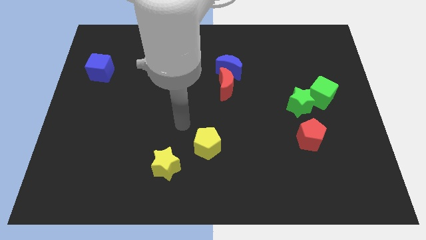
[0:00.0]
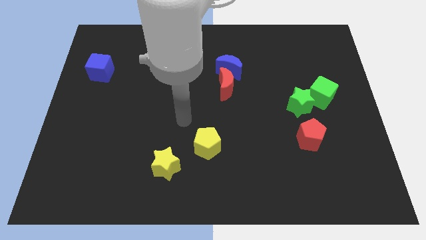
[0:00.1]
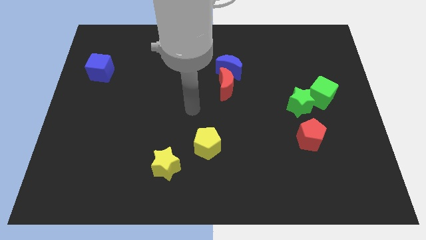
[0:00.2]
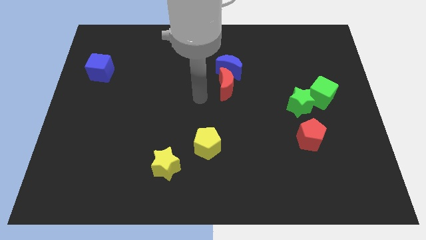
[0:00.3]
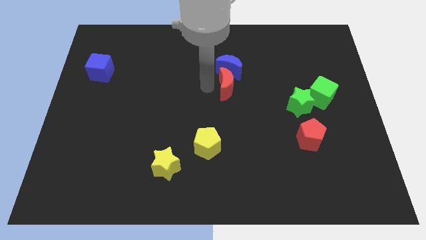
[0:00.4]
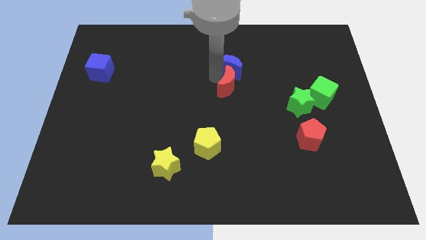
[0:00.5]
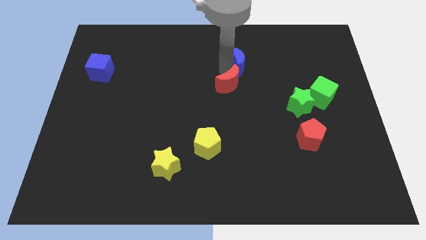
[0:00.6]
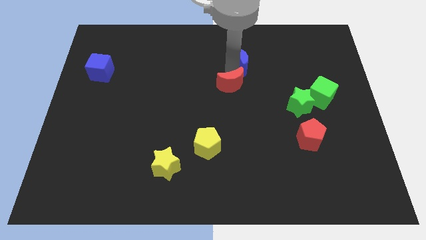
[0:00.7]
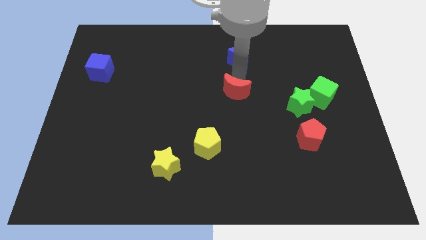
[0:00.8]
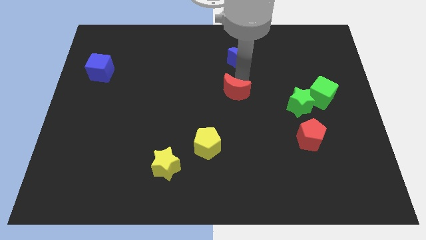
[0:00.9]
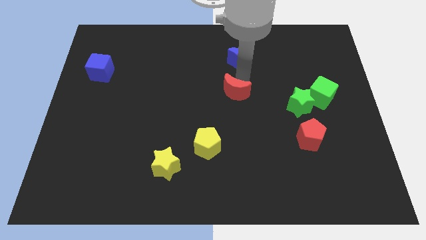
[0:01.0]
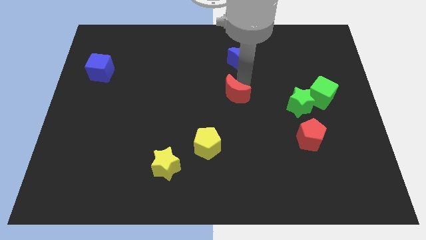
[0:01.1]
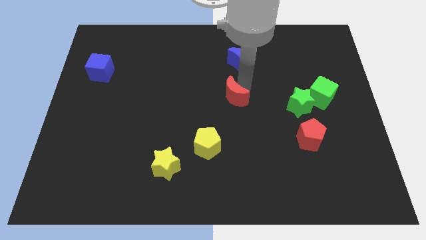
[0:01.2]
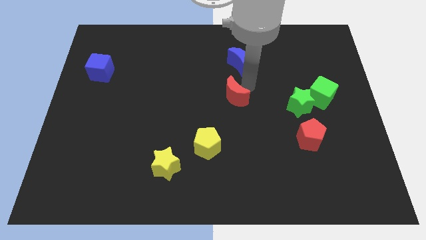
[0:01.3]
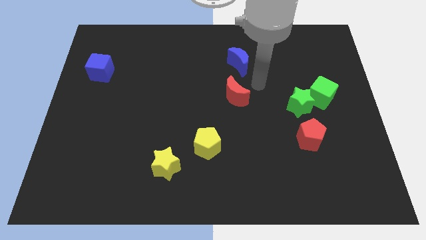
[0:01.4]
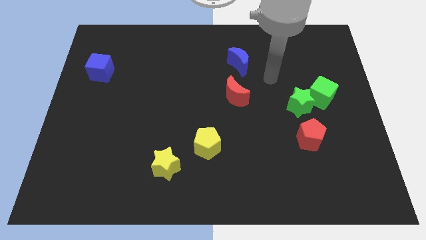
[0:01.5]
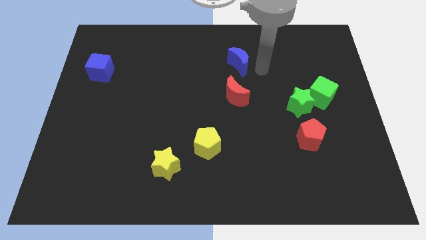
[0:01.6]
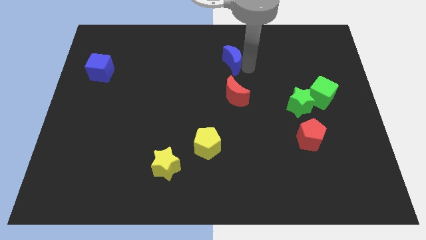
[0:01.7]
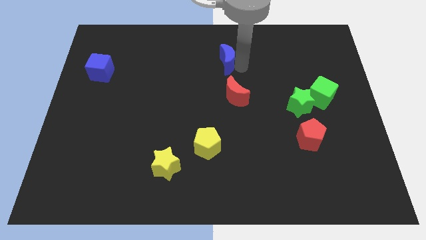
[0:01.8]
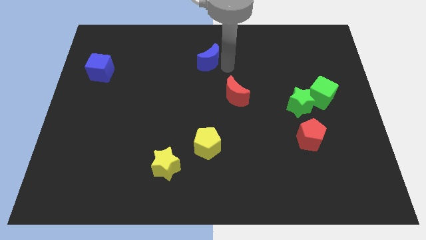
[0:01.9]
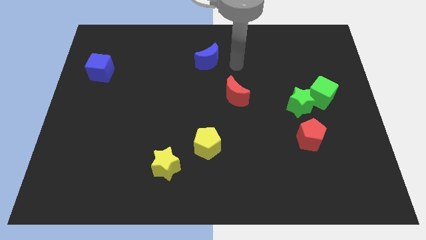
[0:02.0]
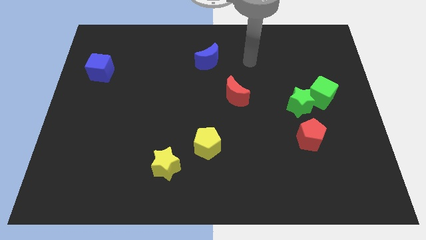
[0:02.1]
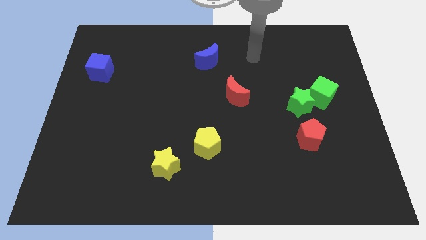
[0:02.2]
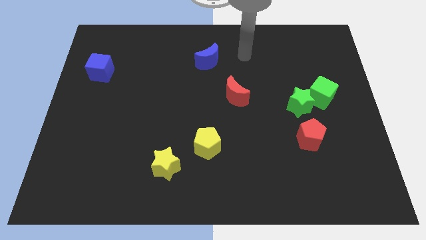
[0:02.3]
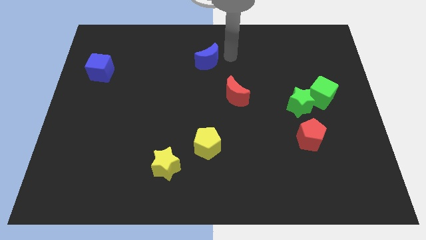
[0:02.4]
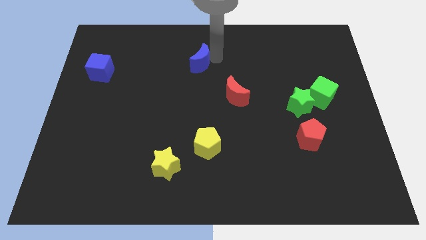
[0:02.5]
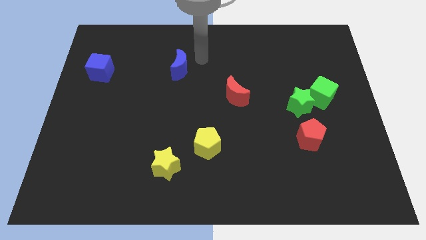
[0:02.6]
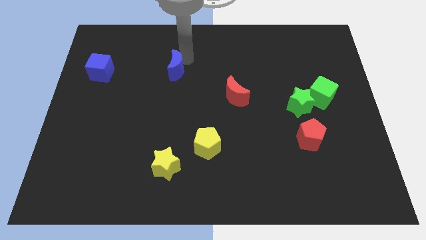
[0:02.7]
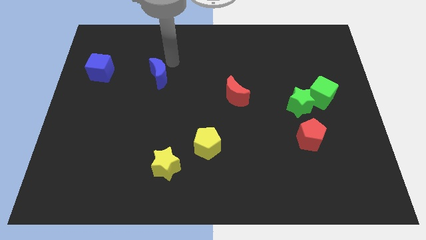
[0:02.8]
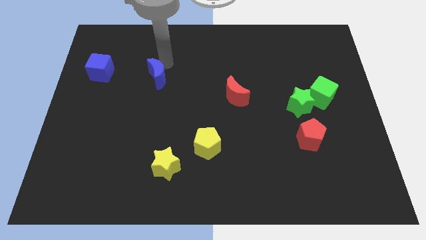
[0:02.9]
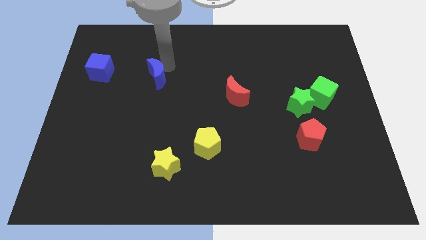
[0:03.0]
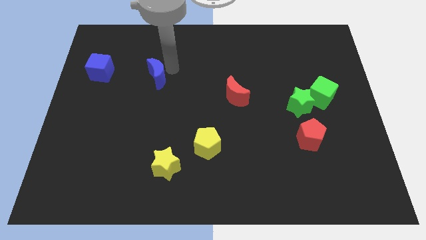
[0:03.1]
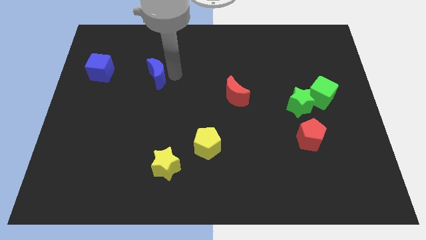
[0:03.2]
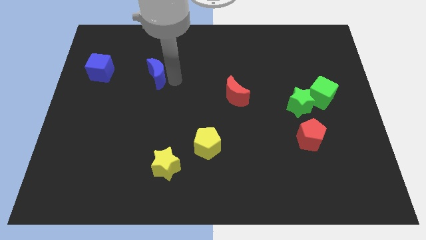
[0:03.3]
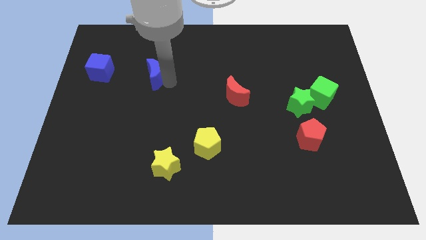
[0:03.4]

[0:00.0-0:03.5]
move the blue crescent towards the blue cube

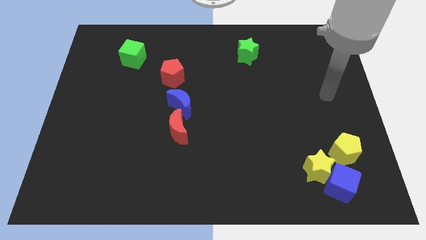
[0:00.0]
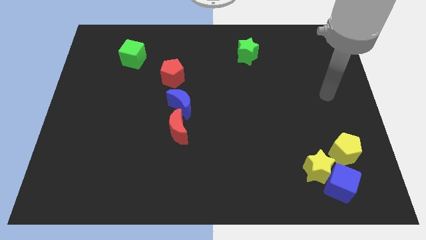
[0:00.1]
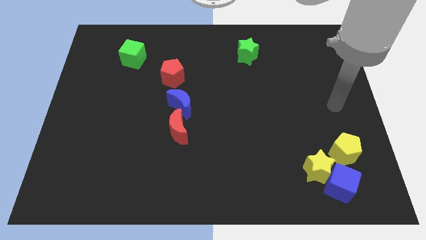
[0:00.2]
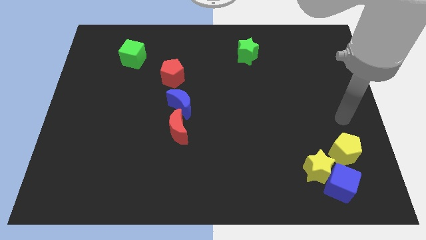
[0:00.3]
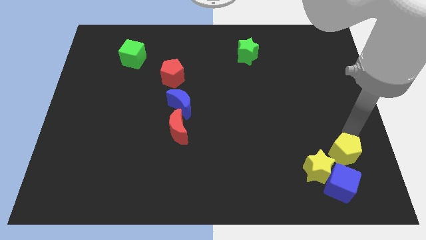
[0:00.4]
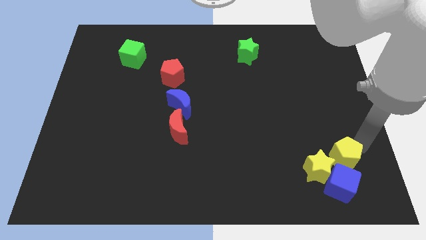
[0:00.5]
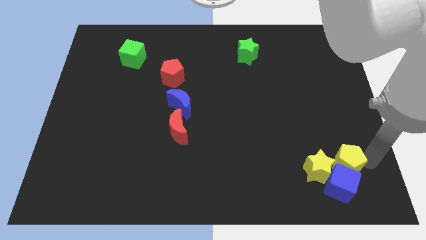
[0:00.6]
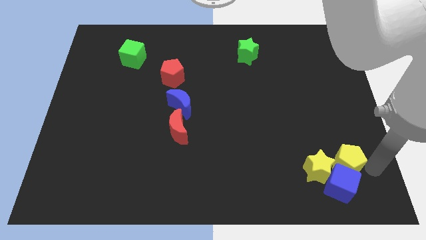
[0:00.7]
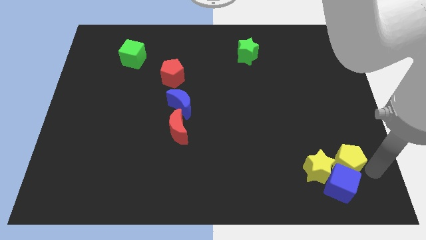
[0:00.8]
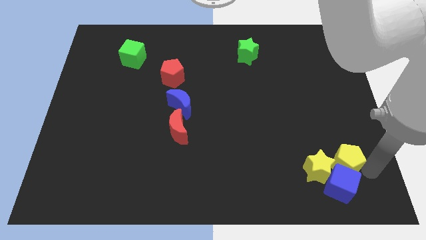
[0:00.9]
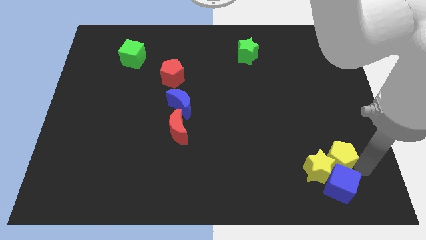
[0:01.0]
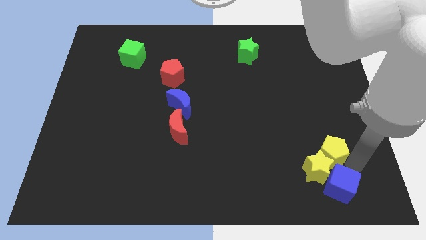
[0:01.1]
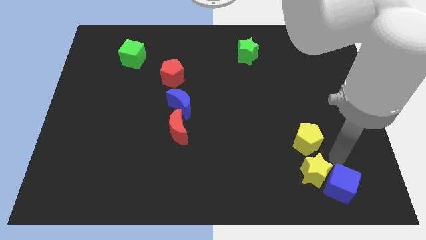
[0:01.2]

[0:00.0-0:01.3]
push the yellow pentagon above the yellow star

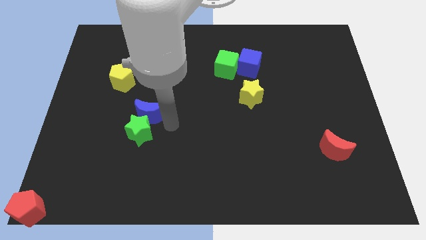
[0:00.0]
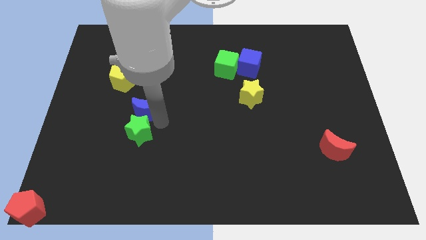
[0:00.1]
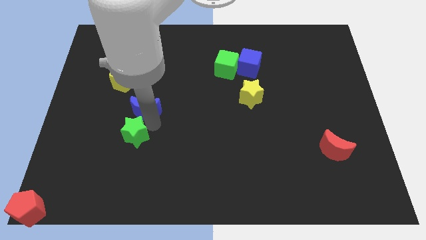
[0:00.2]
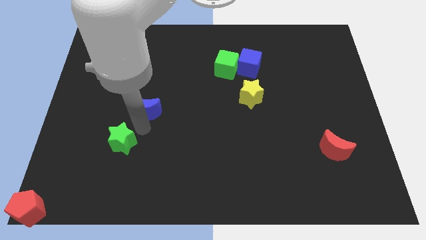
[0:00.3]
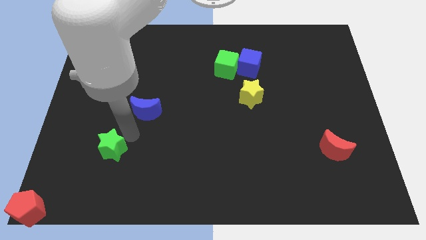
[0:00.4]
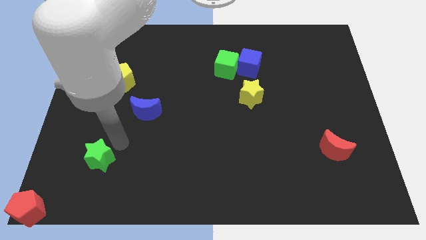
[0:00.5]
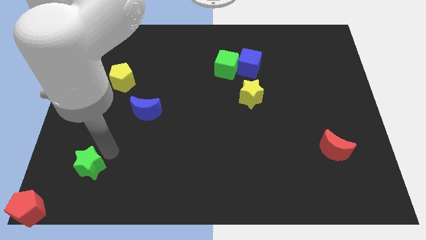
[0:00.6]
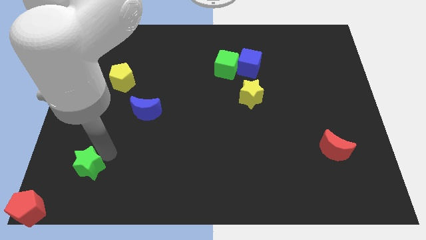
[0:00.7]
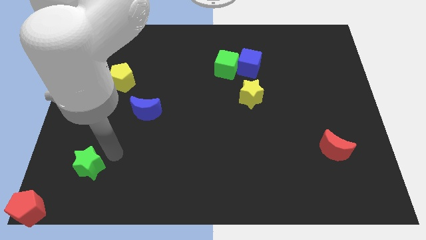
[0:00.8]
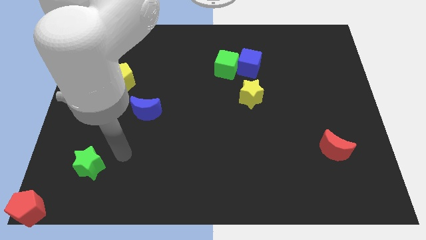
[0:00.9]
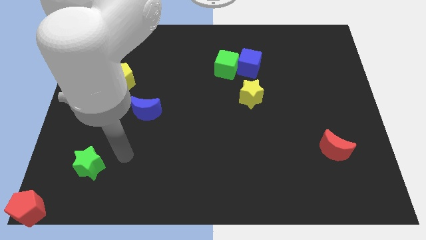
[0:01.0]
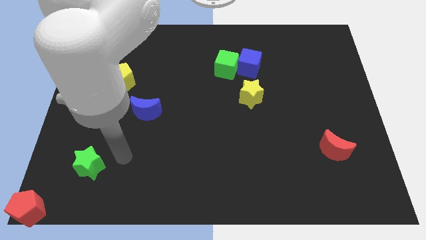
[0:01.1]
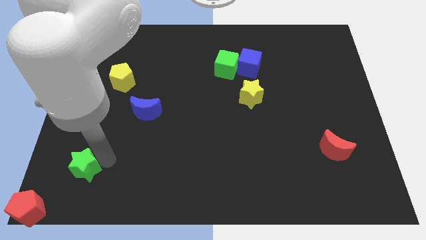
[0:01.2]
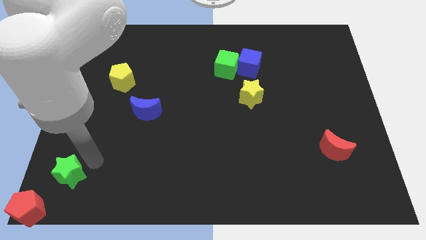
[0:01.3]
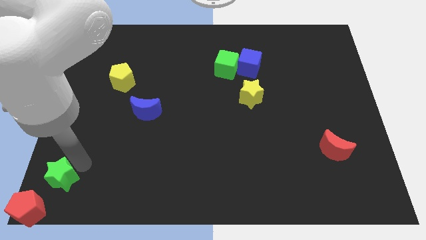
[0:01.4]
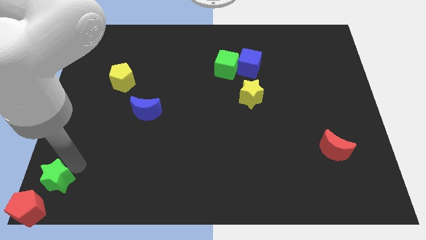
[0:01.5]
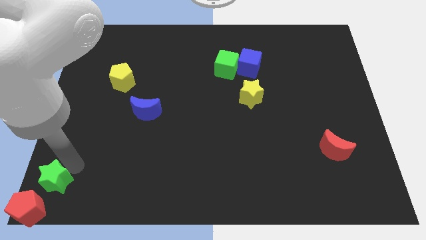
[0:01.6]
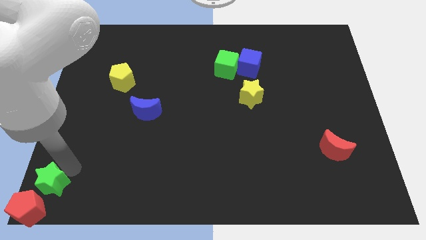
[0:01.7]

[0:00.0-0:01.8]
push the green star close to the top right side of the red pentagon

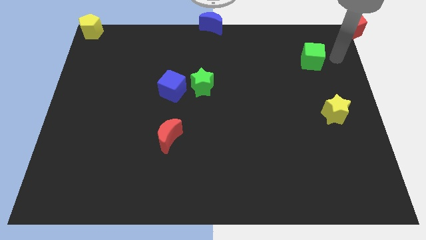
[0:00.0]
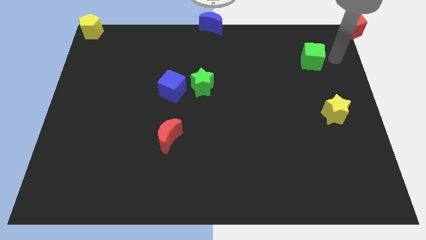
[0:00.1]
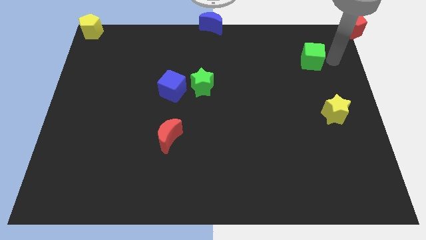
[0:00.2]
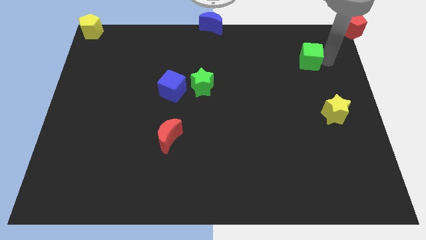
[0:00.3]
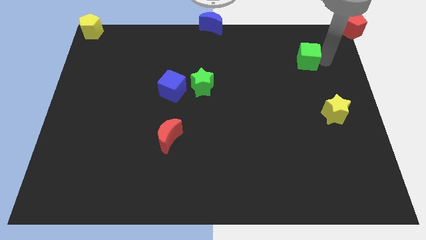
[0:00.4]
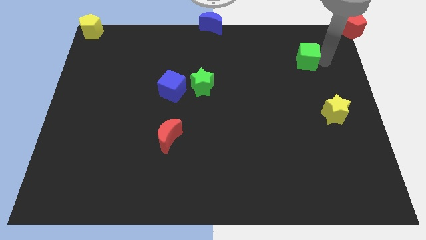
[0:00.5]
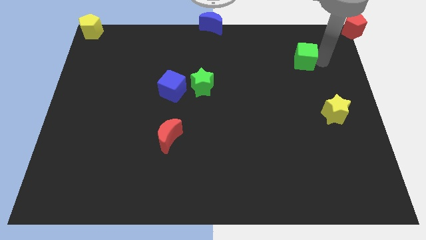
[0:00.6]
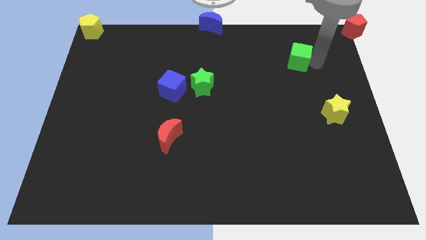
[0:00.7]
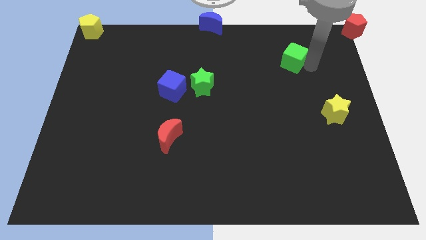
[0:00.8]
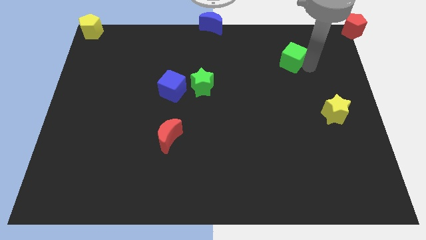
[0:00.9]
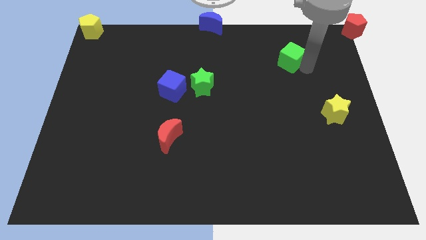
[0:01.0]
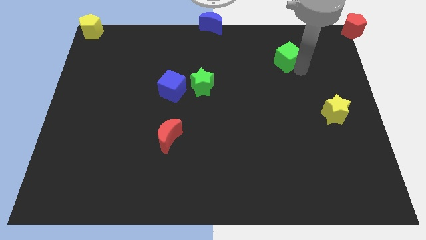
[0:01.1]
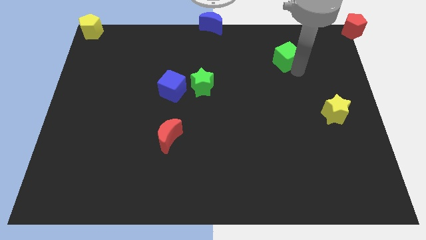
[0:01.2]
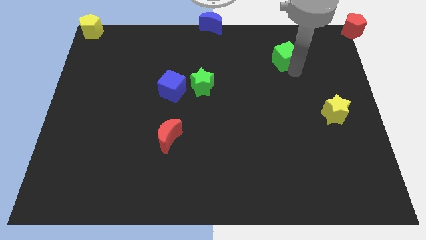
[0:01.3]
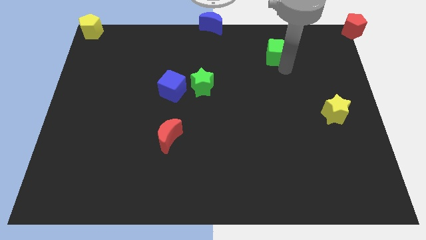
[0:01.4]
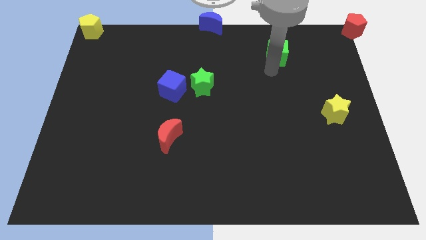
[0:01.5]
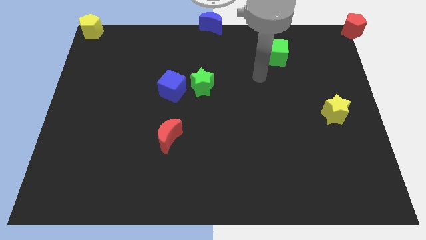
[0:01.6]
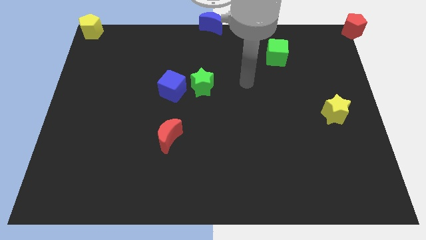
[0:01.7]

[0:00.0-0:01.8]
slide the green cube between blue moon and yellow star

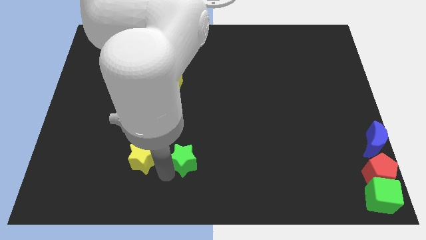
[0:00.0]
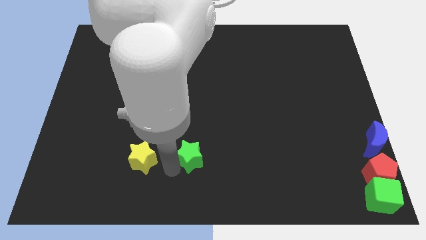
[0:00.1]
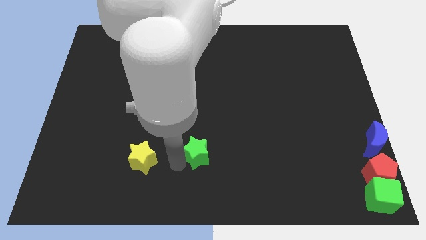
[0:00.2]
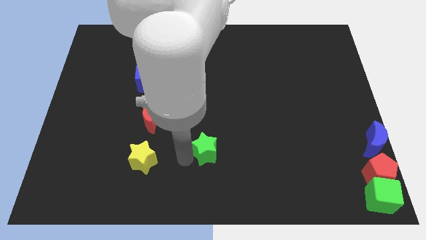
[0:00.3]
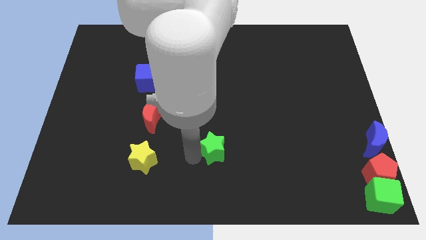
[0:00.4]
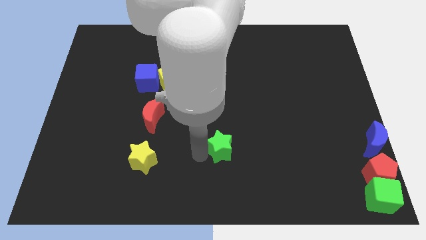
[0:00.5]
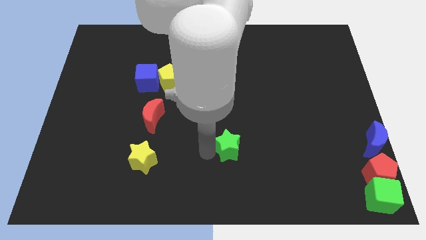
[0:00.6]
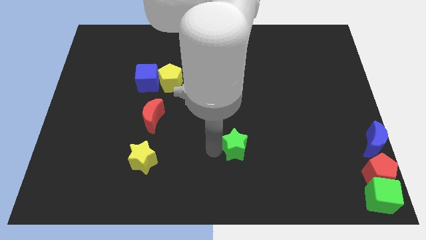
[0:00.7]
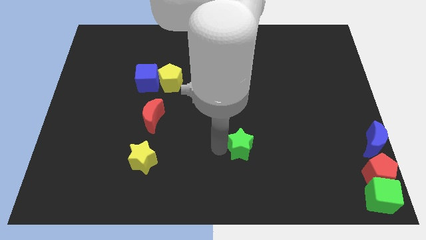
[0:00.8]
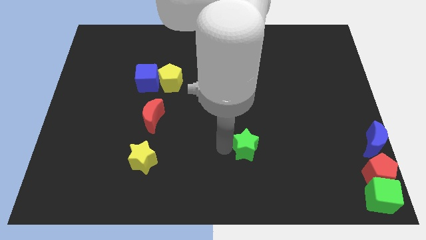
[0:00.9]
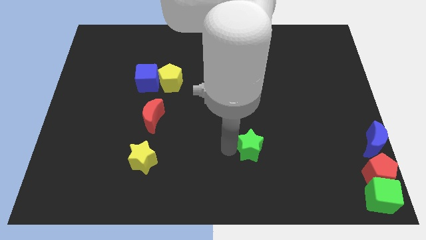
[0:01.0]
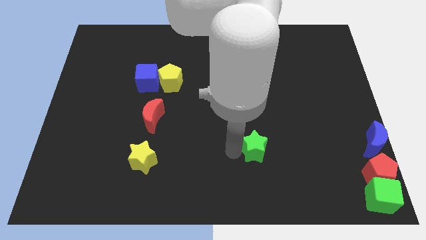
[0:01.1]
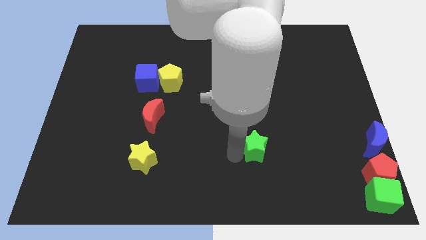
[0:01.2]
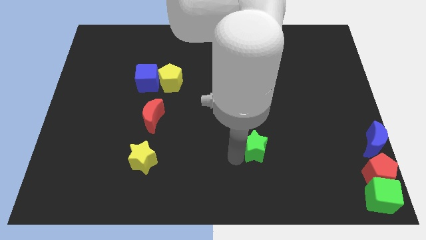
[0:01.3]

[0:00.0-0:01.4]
push the green star towards the blue moon
